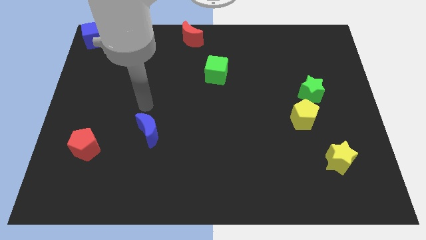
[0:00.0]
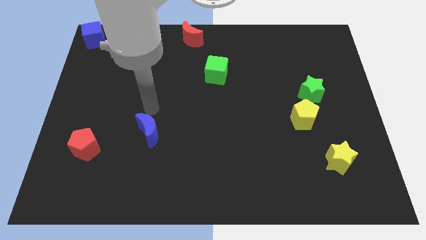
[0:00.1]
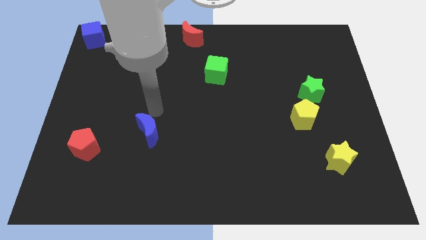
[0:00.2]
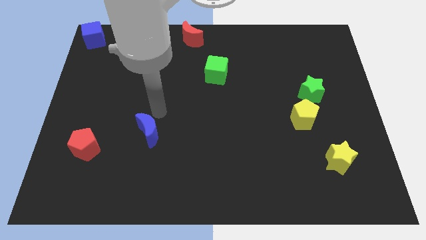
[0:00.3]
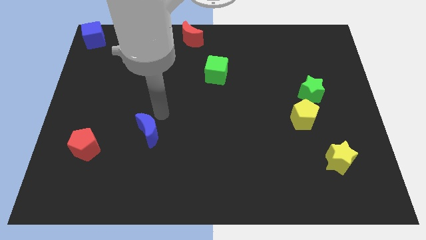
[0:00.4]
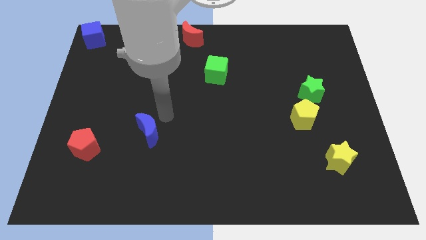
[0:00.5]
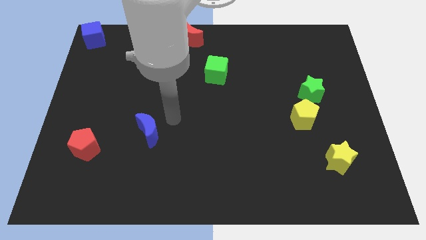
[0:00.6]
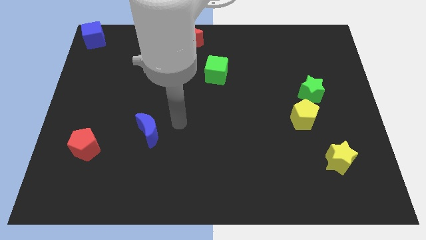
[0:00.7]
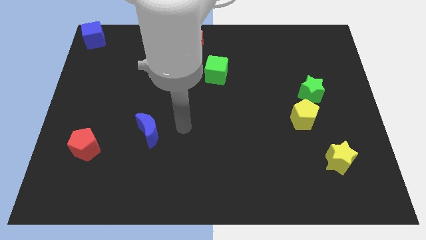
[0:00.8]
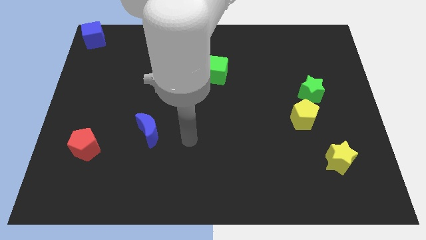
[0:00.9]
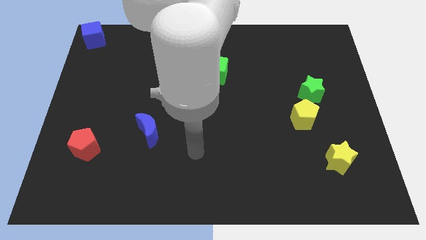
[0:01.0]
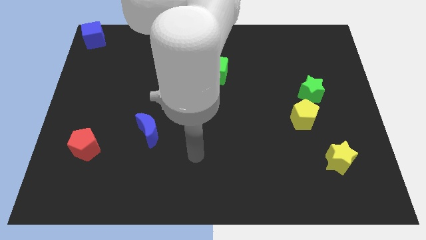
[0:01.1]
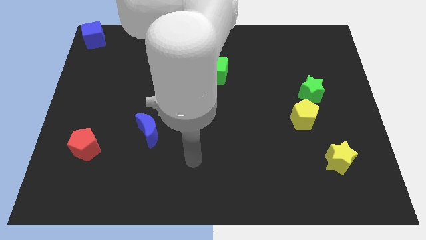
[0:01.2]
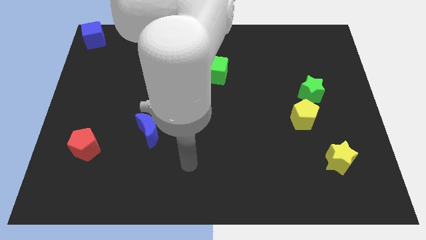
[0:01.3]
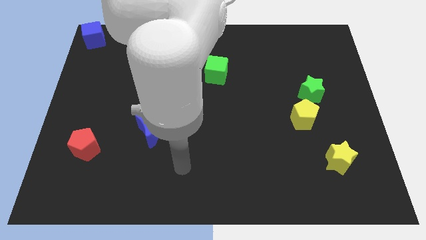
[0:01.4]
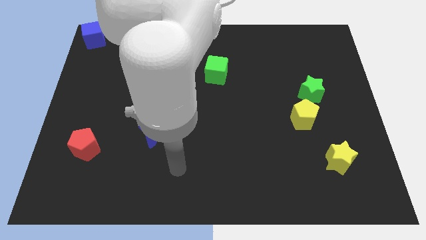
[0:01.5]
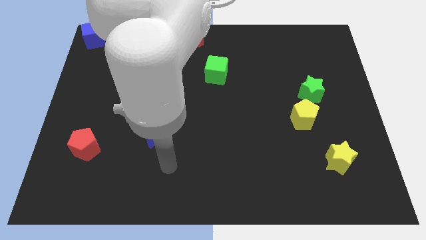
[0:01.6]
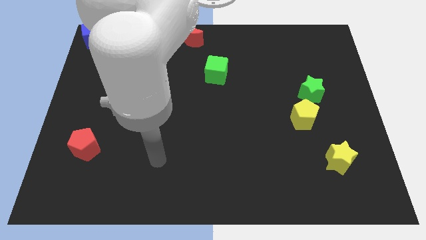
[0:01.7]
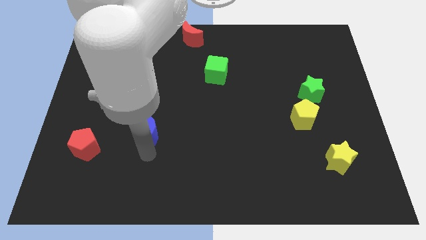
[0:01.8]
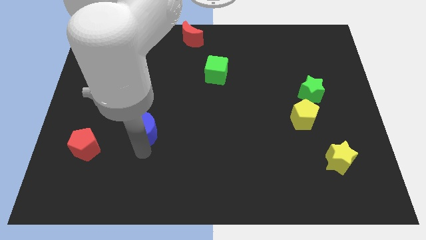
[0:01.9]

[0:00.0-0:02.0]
move your arm below the blue moon

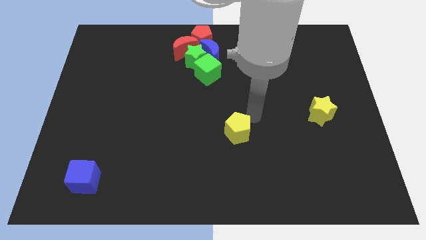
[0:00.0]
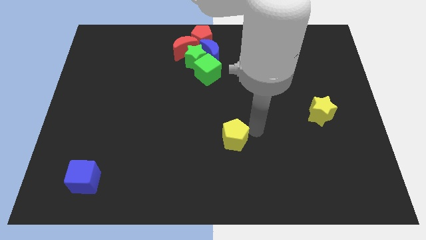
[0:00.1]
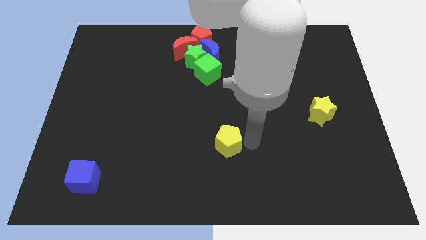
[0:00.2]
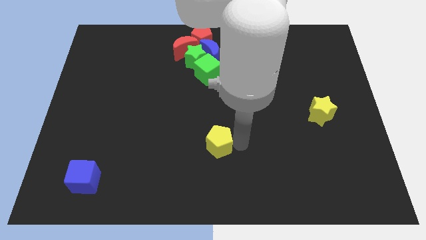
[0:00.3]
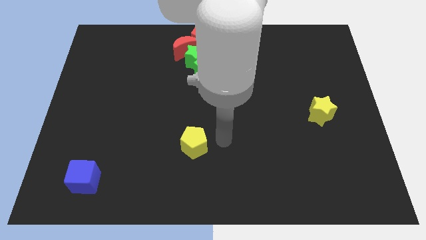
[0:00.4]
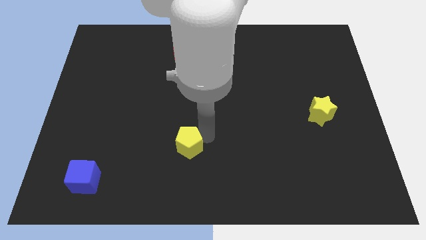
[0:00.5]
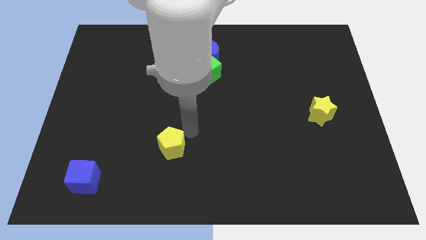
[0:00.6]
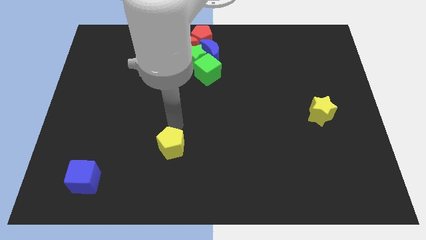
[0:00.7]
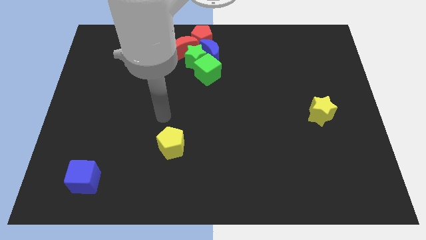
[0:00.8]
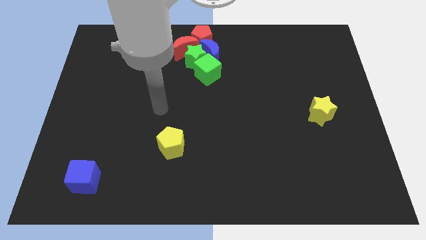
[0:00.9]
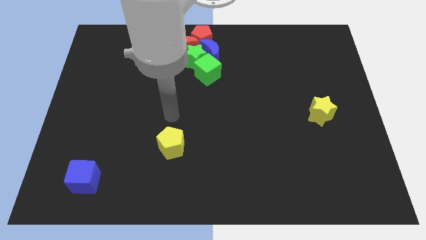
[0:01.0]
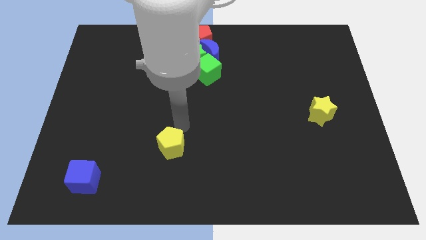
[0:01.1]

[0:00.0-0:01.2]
push the yellow pentagon towards the blue cube

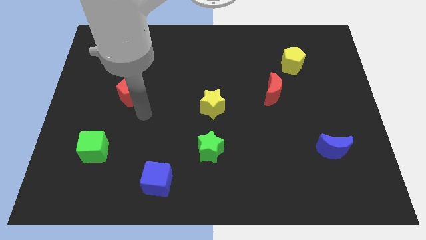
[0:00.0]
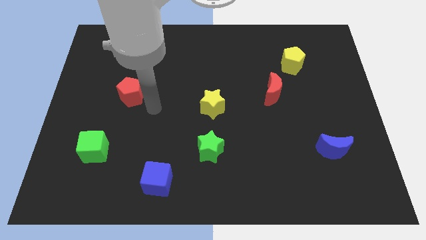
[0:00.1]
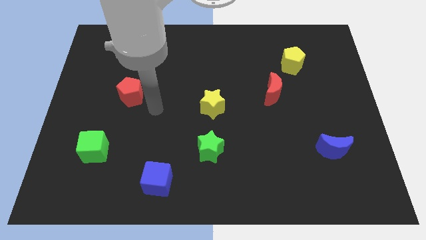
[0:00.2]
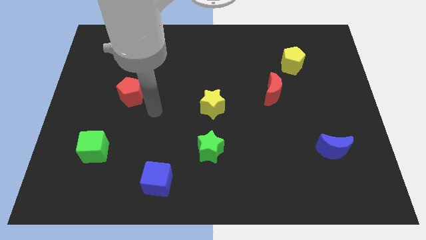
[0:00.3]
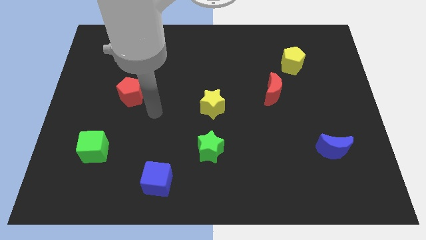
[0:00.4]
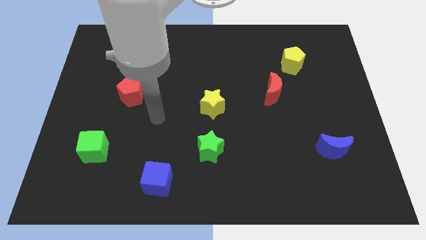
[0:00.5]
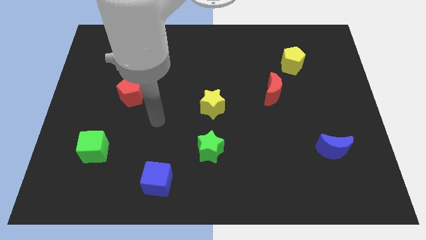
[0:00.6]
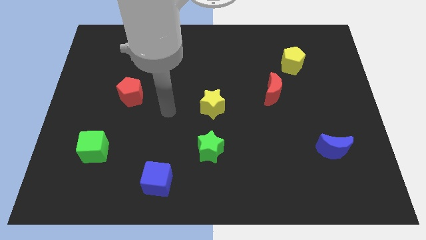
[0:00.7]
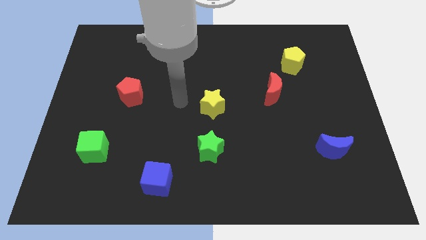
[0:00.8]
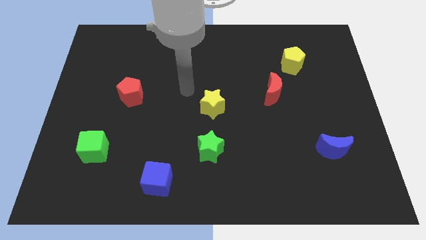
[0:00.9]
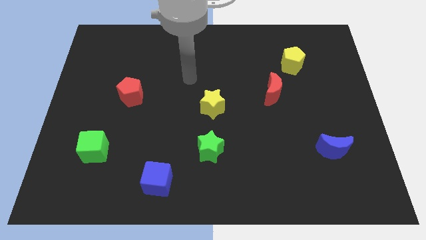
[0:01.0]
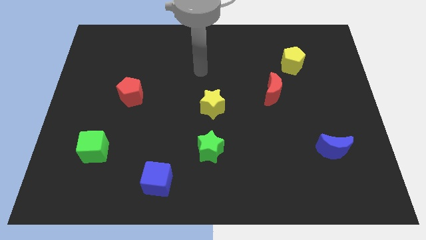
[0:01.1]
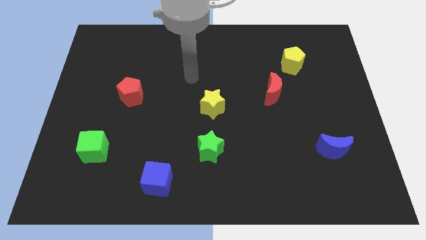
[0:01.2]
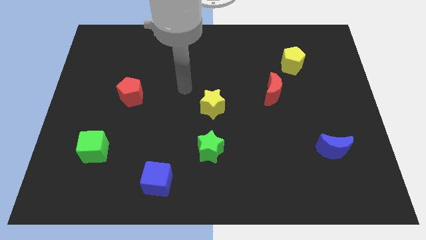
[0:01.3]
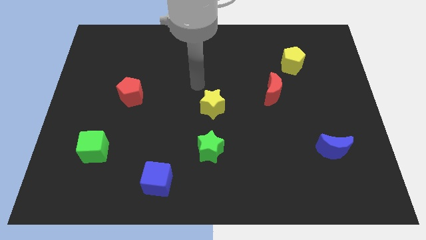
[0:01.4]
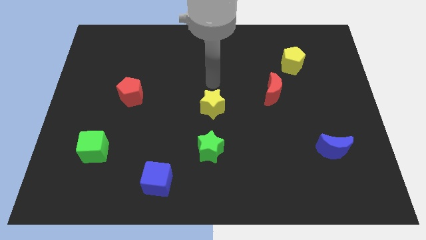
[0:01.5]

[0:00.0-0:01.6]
place your arm at the top of the yellow star

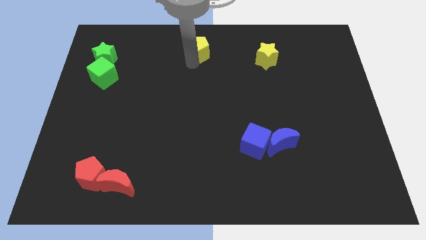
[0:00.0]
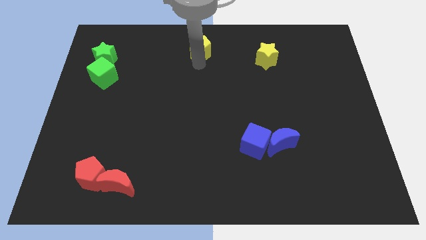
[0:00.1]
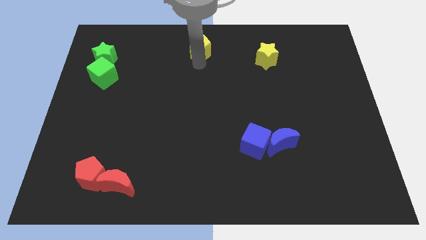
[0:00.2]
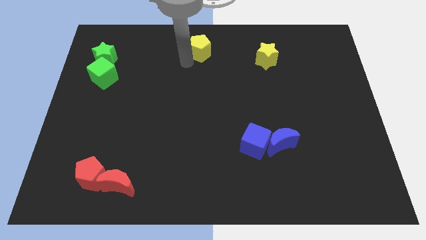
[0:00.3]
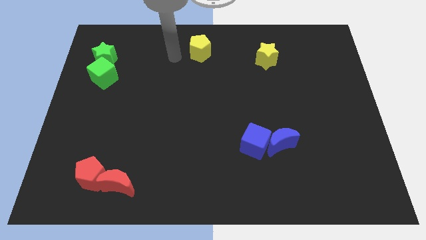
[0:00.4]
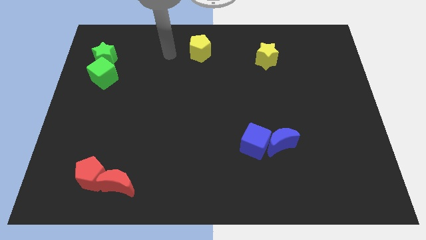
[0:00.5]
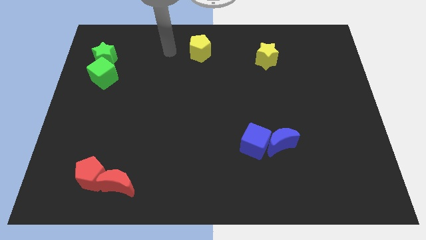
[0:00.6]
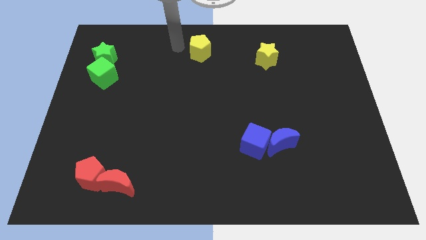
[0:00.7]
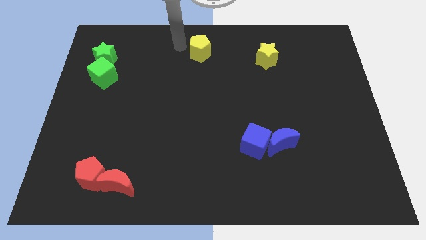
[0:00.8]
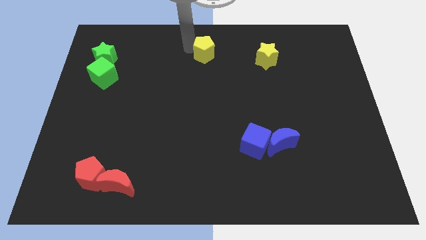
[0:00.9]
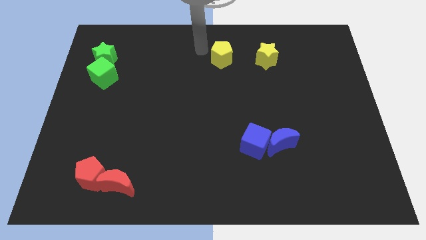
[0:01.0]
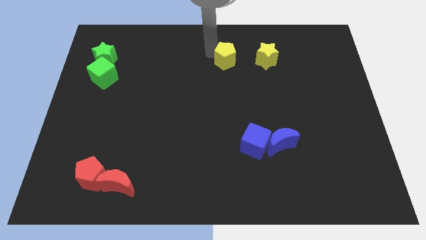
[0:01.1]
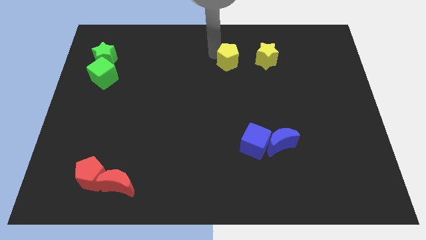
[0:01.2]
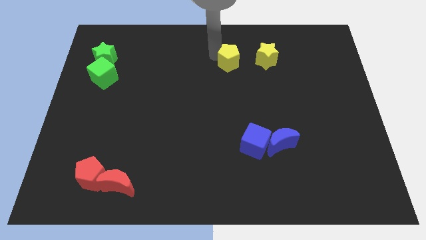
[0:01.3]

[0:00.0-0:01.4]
place yellow pentagon parallel to yellow star

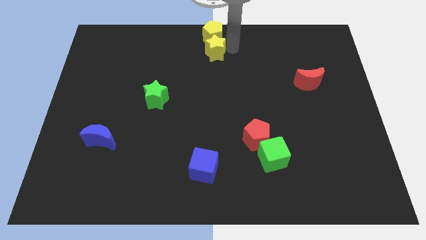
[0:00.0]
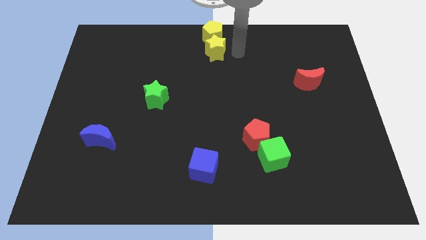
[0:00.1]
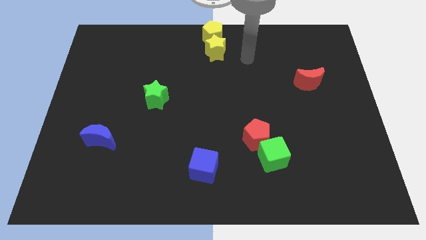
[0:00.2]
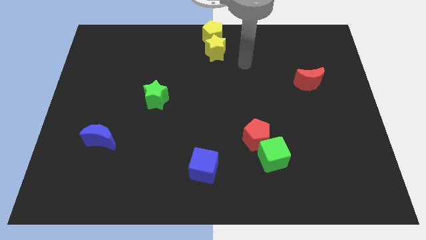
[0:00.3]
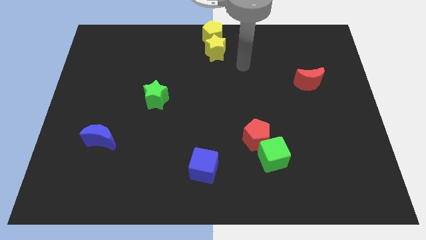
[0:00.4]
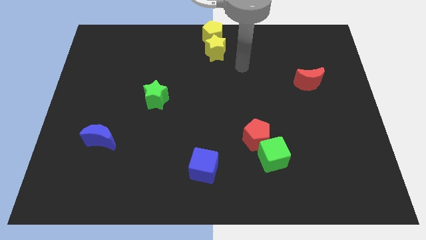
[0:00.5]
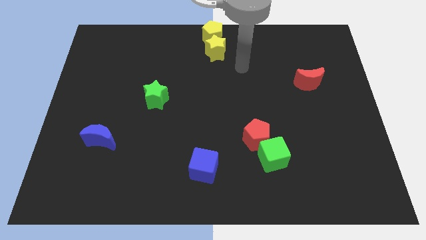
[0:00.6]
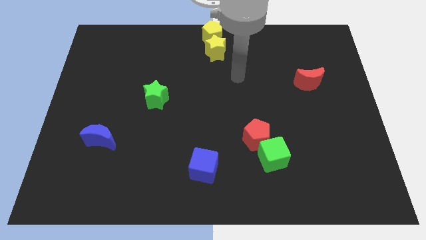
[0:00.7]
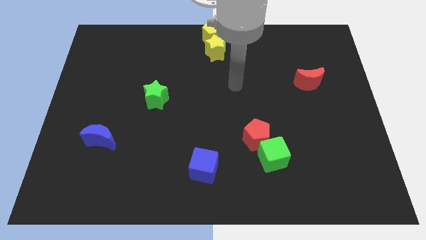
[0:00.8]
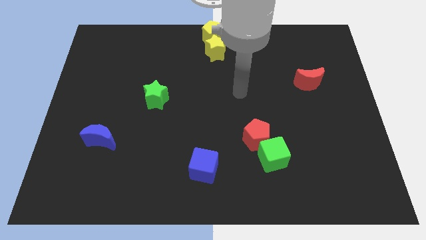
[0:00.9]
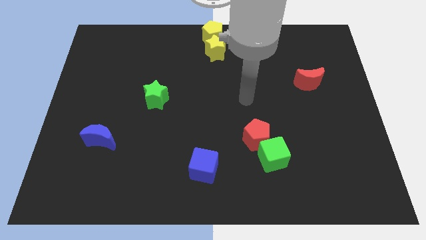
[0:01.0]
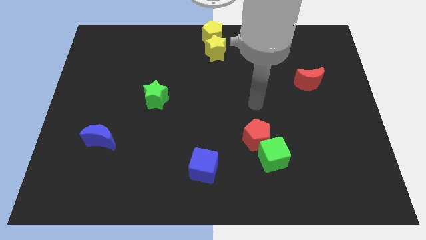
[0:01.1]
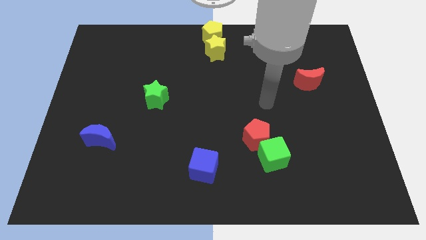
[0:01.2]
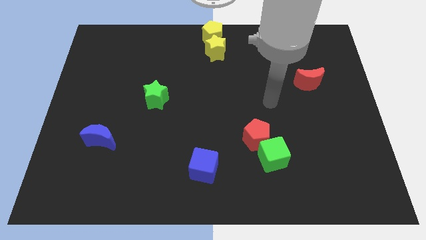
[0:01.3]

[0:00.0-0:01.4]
move the arm away from the yellow star

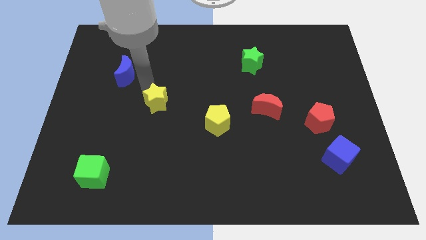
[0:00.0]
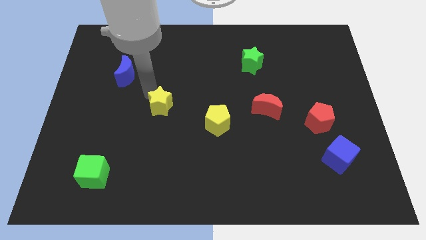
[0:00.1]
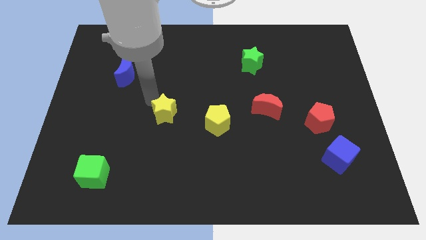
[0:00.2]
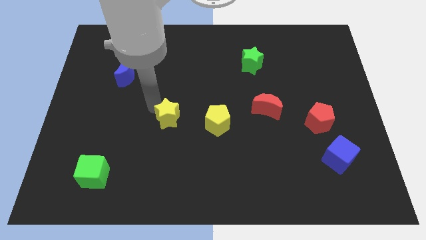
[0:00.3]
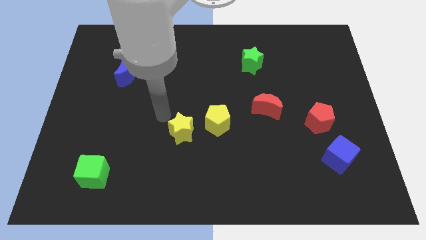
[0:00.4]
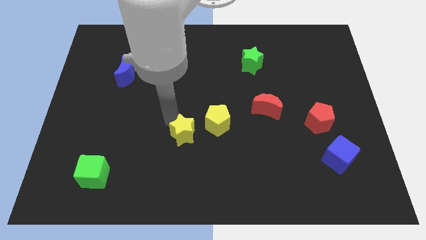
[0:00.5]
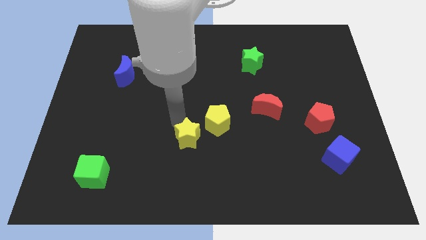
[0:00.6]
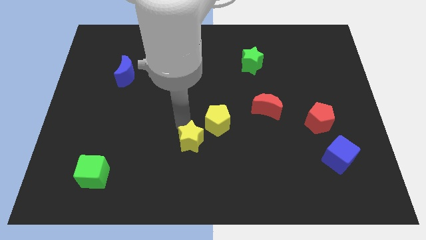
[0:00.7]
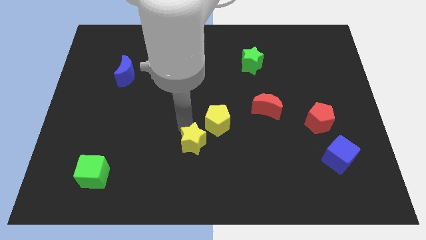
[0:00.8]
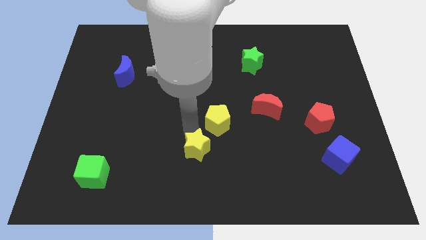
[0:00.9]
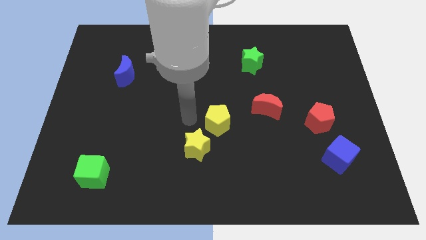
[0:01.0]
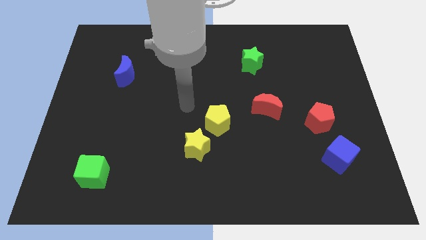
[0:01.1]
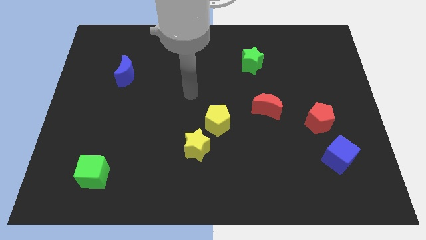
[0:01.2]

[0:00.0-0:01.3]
place yellow star to the bottom left of yellow pentagon
